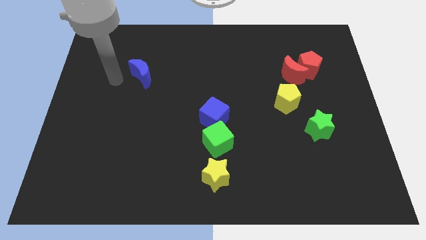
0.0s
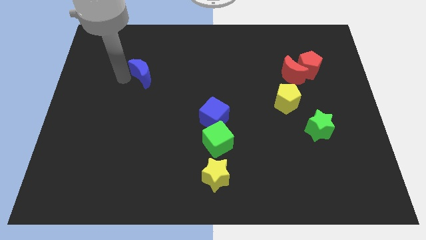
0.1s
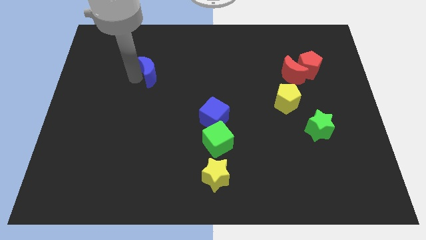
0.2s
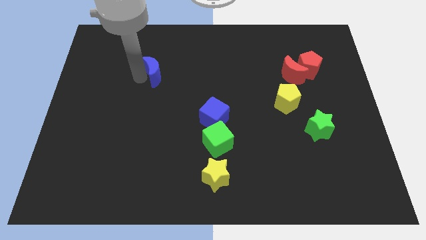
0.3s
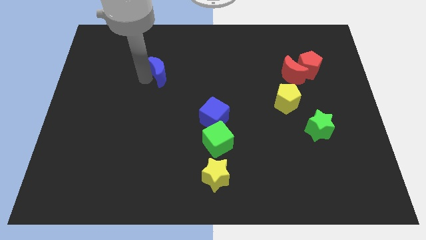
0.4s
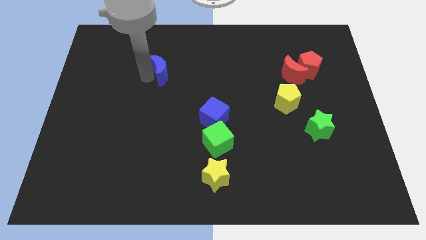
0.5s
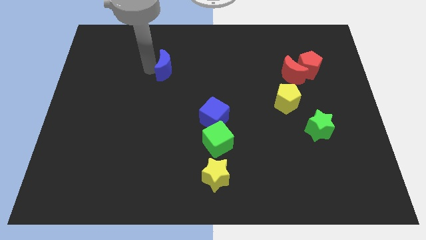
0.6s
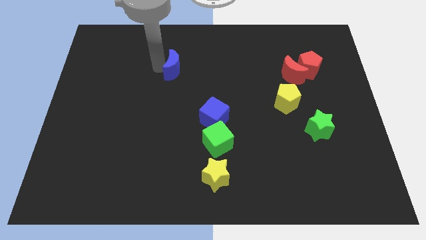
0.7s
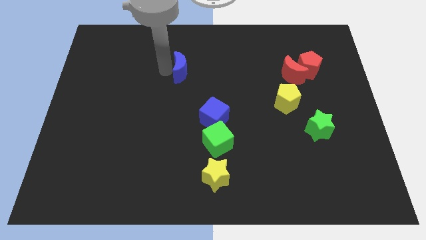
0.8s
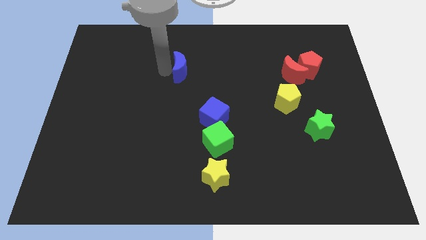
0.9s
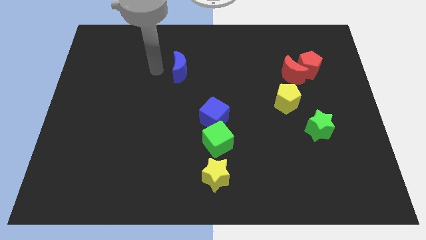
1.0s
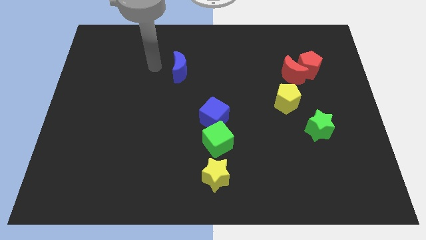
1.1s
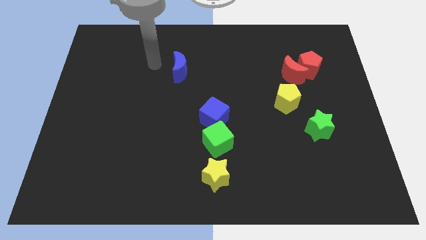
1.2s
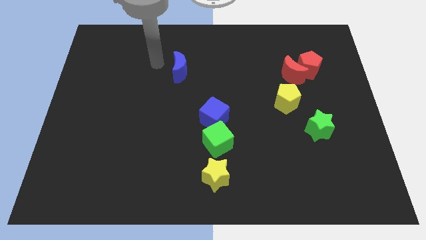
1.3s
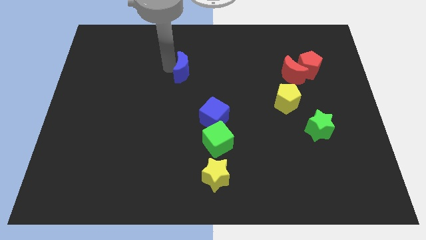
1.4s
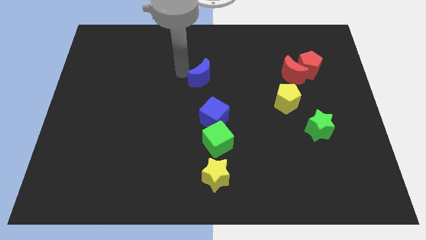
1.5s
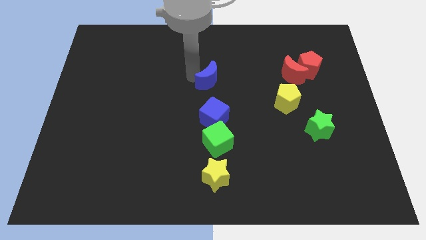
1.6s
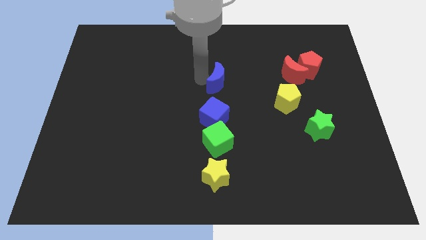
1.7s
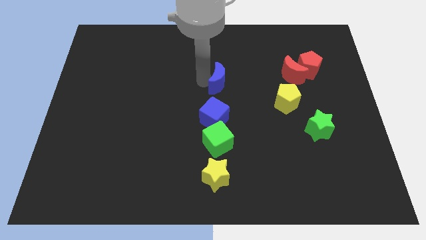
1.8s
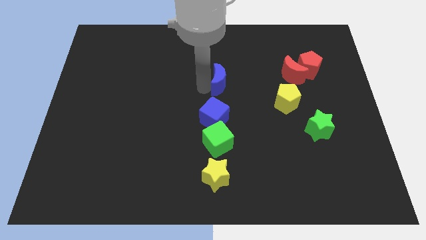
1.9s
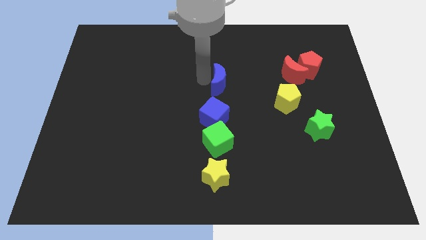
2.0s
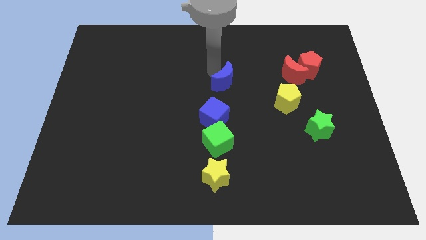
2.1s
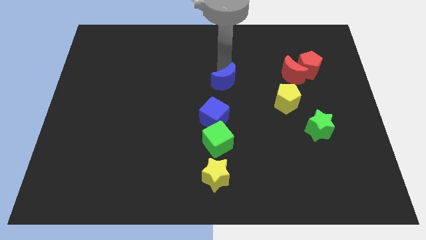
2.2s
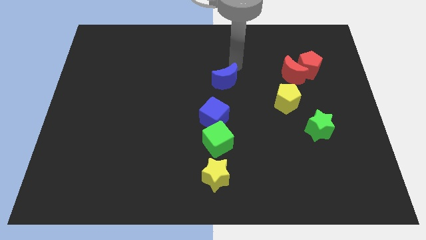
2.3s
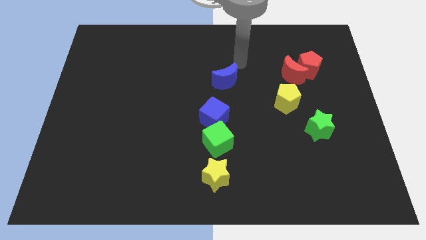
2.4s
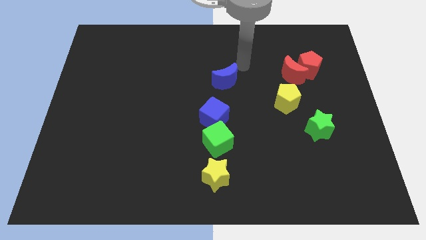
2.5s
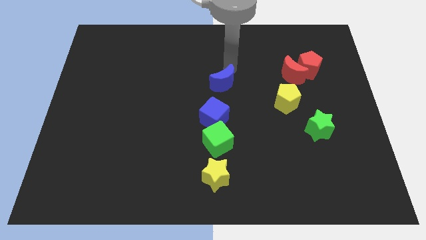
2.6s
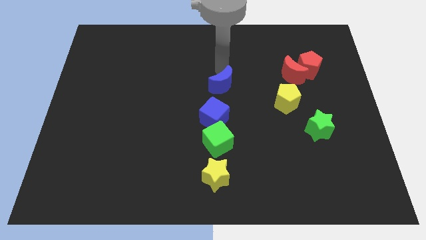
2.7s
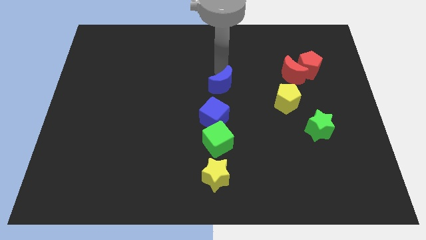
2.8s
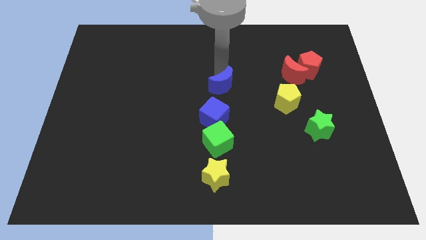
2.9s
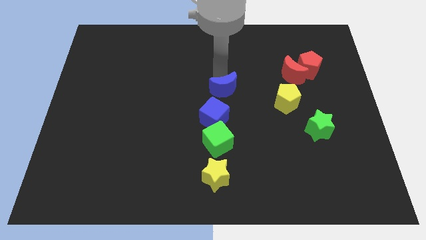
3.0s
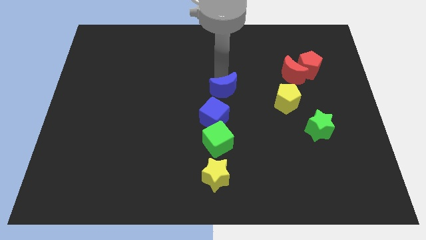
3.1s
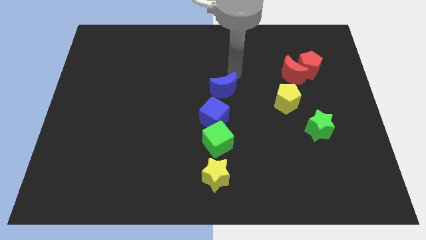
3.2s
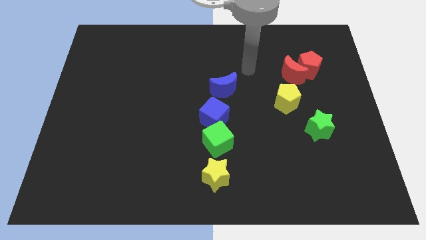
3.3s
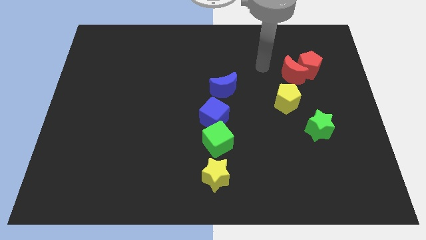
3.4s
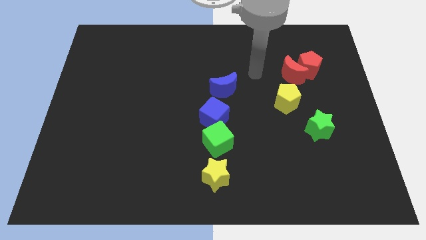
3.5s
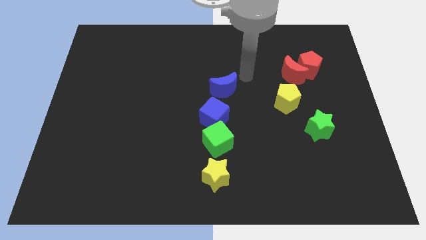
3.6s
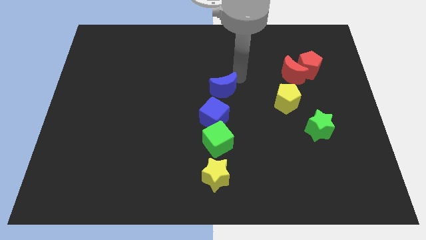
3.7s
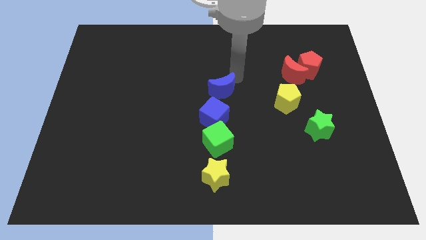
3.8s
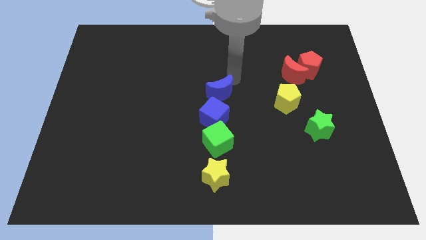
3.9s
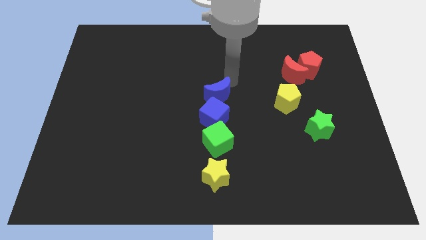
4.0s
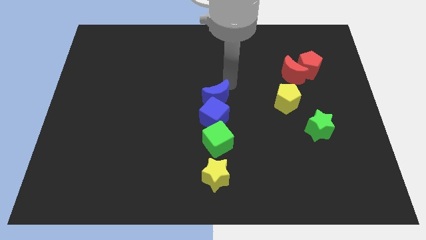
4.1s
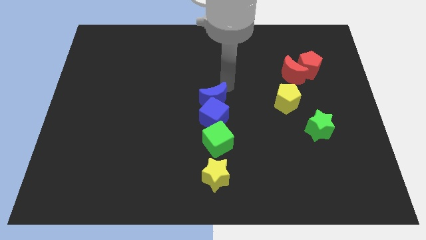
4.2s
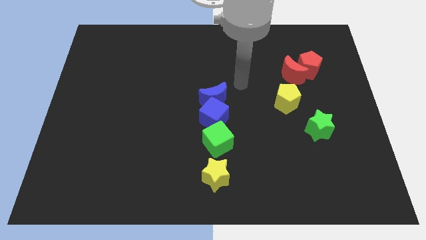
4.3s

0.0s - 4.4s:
place the blue crescent on top of blue cube

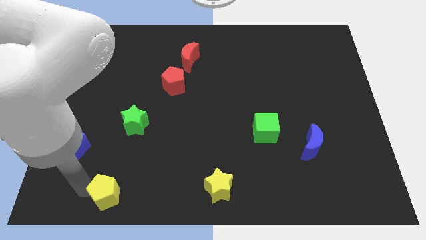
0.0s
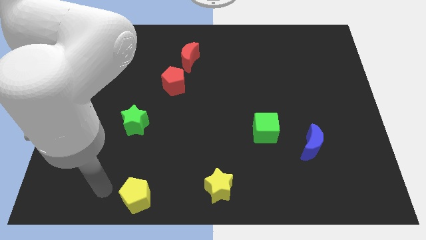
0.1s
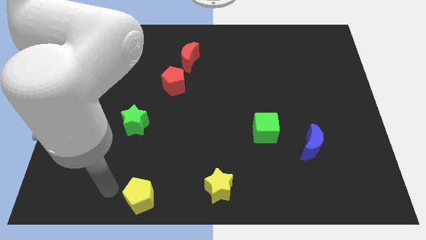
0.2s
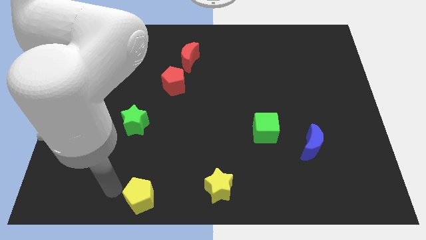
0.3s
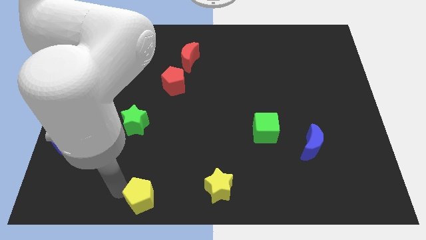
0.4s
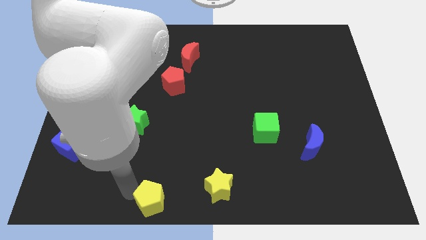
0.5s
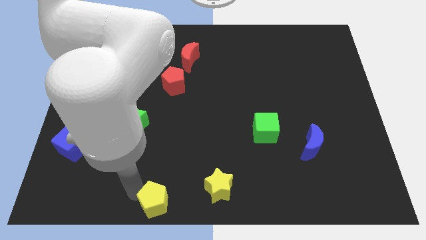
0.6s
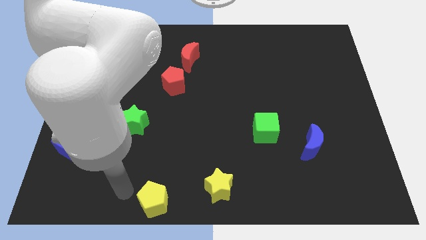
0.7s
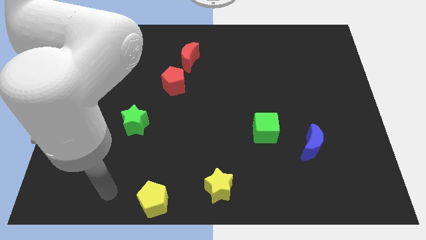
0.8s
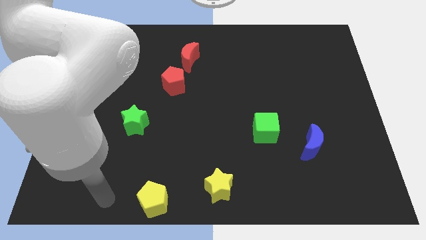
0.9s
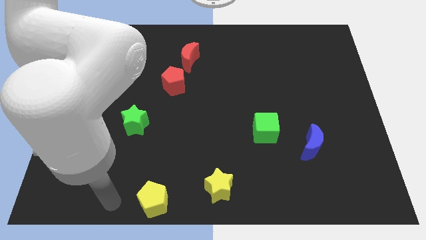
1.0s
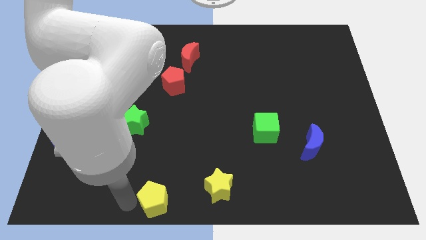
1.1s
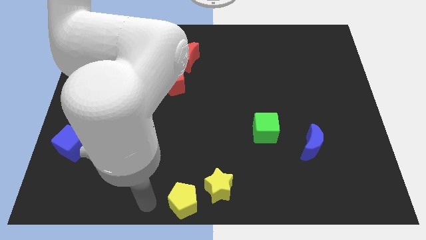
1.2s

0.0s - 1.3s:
push yellow pentagon at bottom center

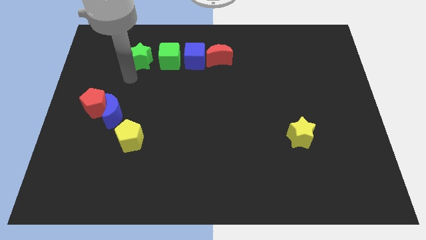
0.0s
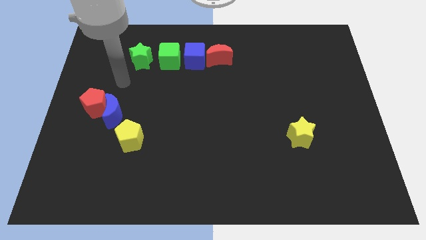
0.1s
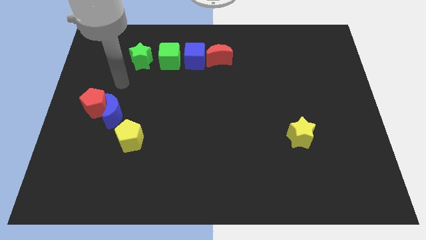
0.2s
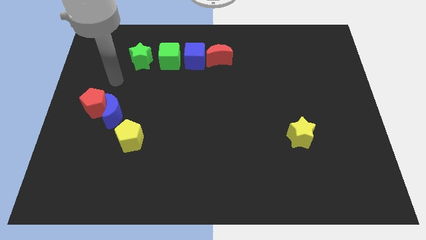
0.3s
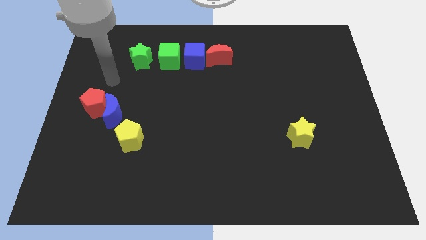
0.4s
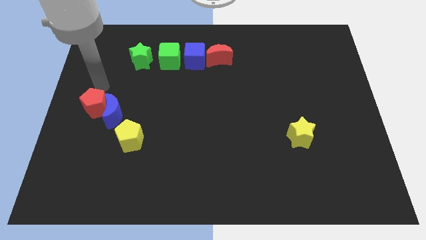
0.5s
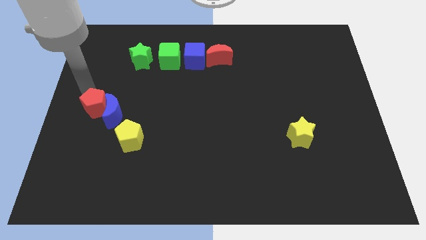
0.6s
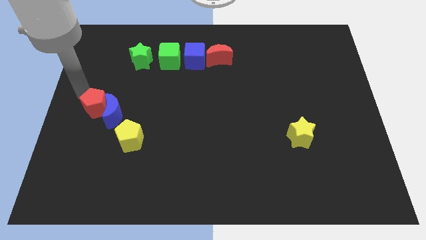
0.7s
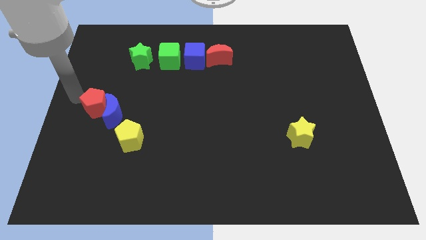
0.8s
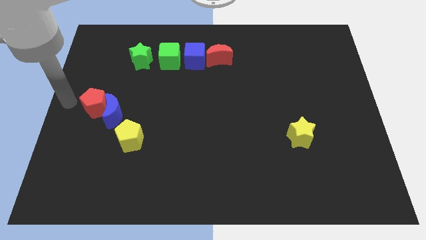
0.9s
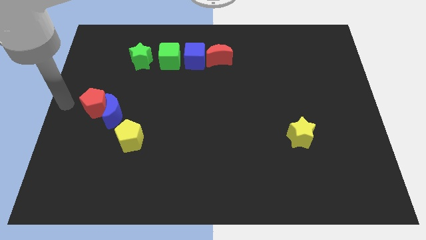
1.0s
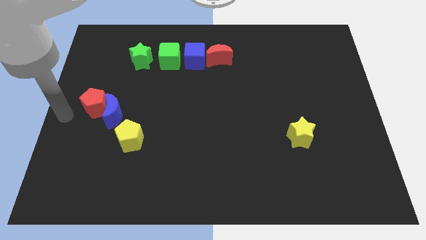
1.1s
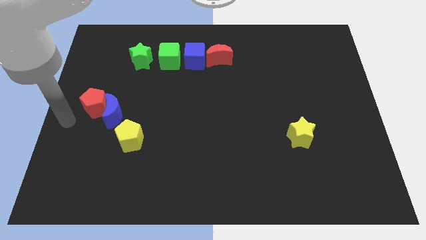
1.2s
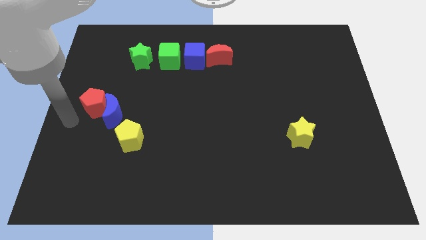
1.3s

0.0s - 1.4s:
move your hand towards the left of the red pentagon

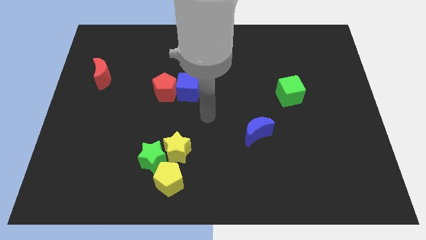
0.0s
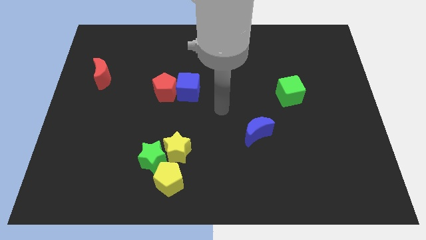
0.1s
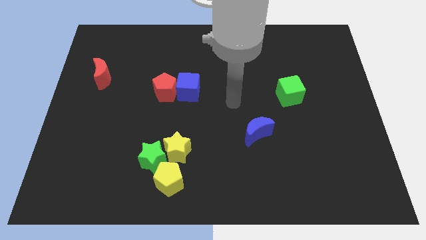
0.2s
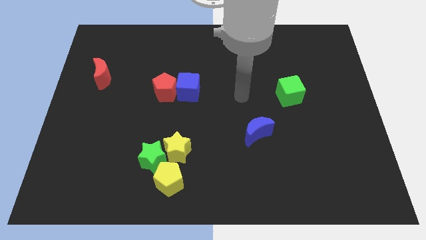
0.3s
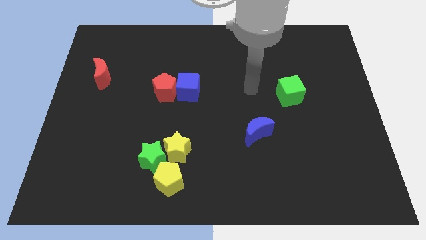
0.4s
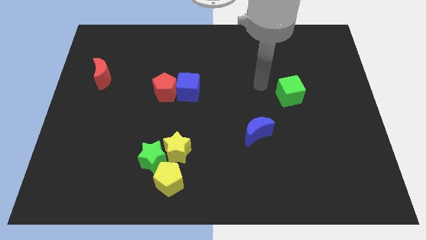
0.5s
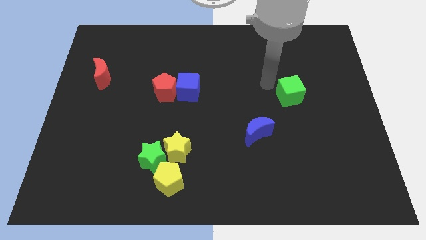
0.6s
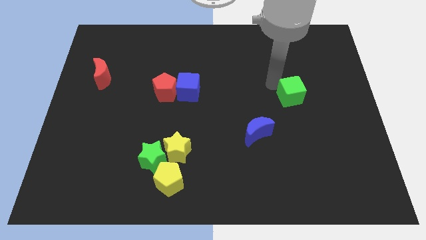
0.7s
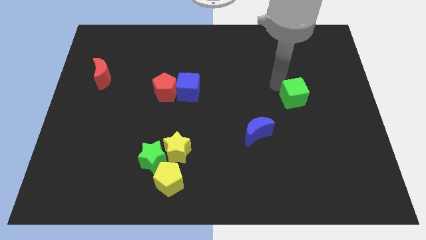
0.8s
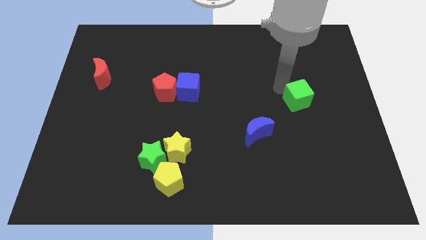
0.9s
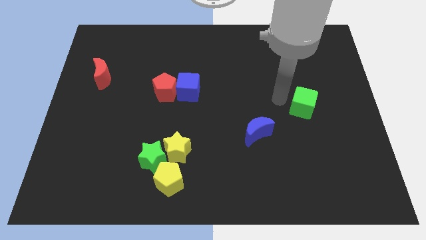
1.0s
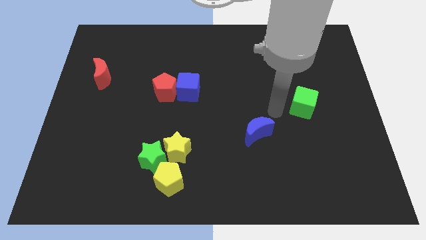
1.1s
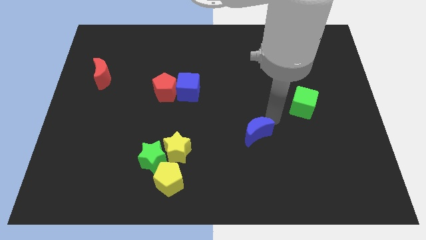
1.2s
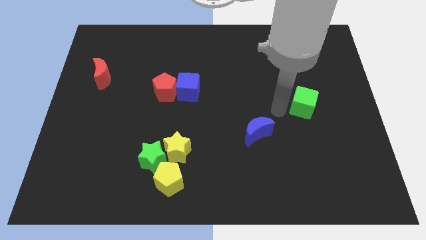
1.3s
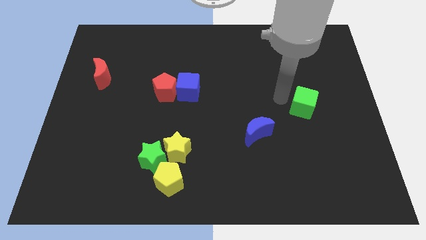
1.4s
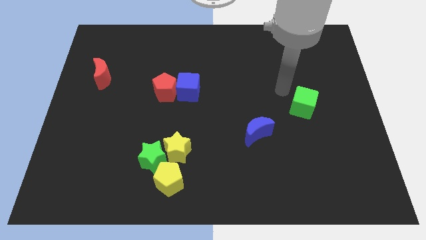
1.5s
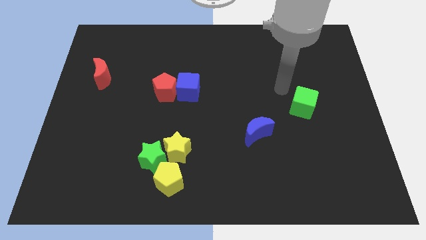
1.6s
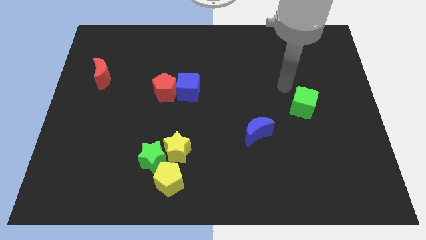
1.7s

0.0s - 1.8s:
move the green cube slightly to the bottom of the board

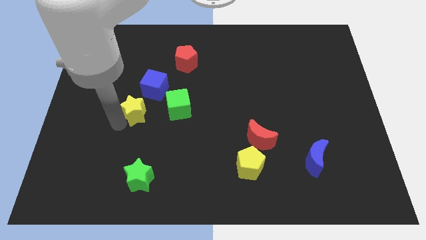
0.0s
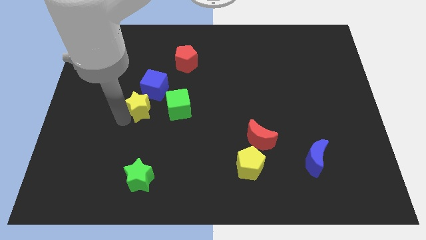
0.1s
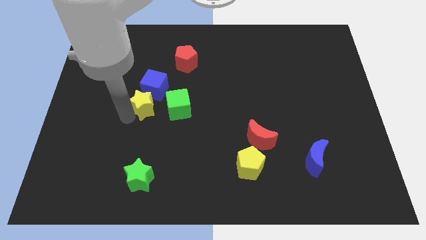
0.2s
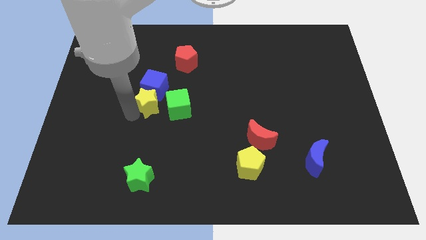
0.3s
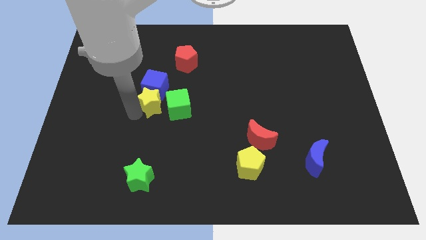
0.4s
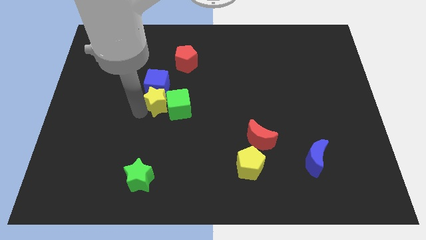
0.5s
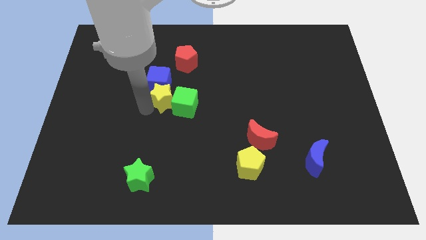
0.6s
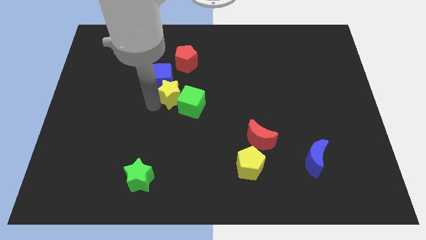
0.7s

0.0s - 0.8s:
drag the yellow star to the right
